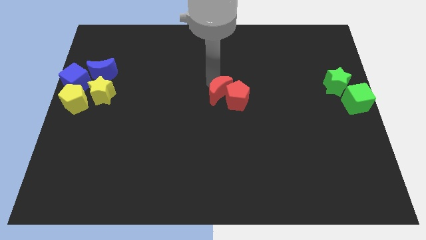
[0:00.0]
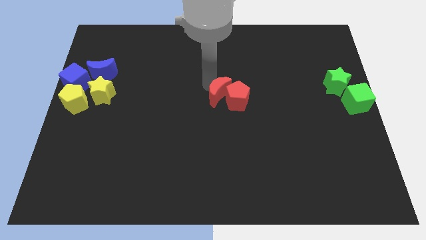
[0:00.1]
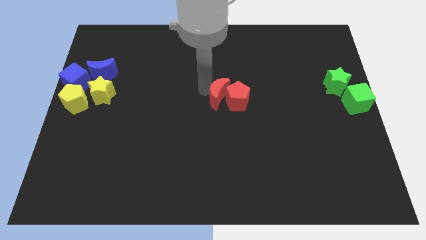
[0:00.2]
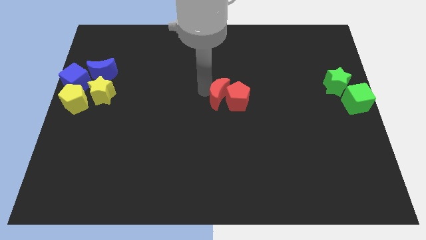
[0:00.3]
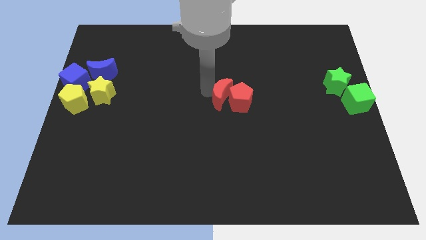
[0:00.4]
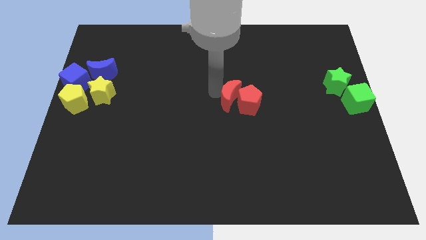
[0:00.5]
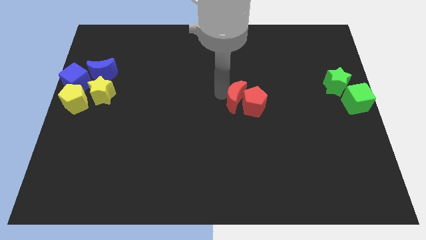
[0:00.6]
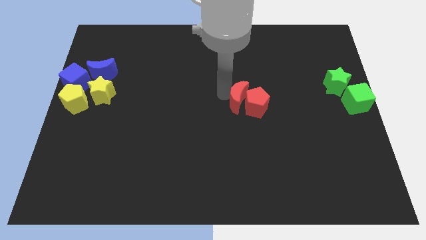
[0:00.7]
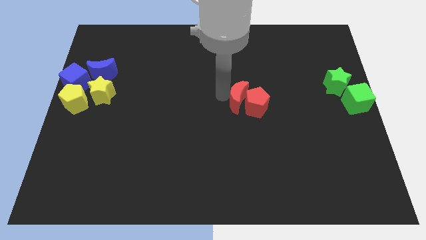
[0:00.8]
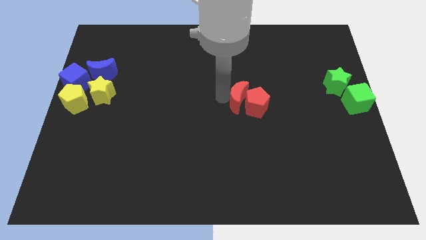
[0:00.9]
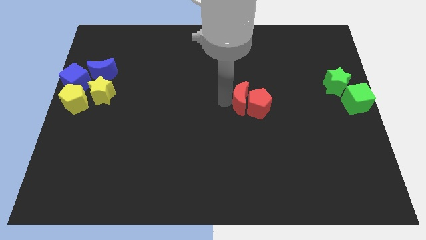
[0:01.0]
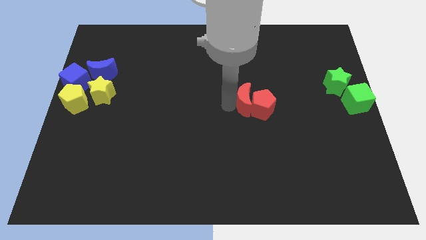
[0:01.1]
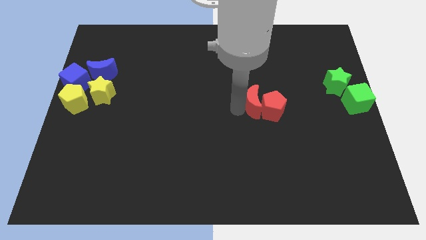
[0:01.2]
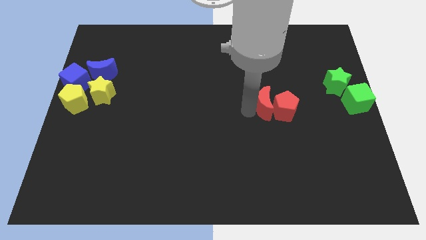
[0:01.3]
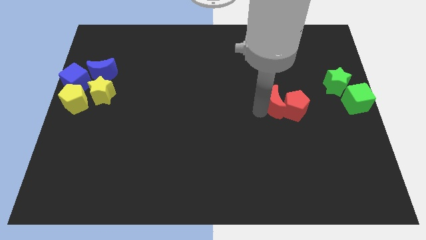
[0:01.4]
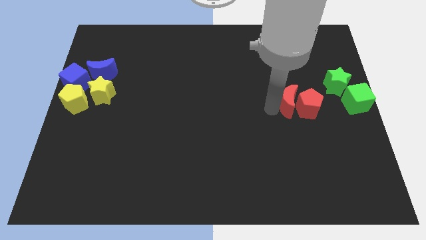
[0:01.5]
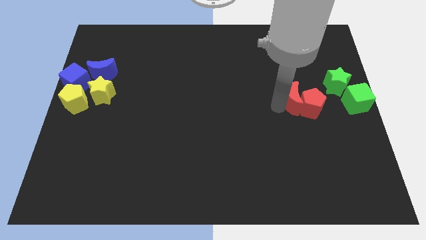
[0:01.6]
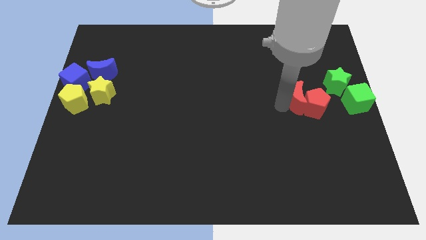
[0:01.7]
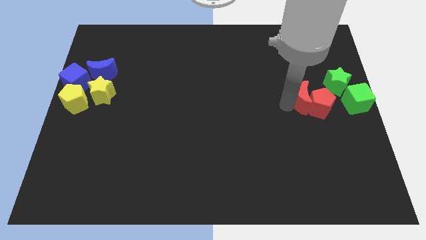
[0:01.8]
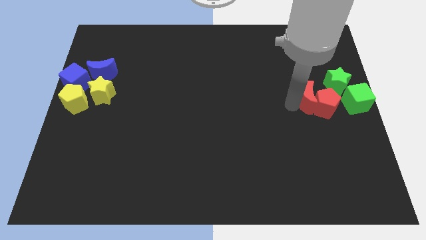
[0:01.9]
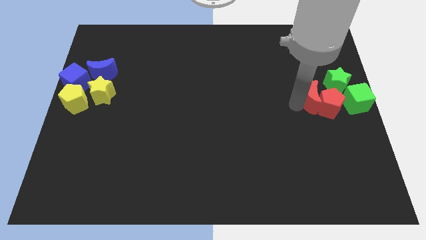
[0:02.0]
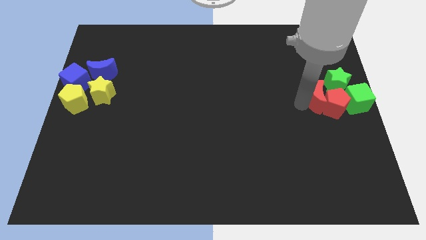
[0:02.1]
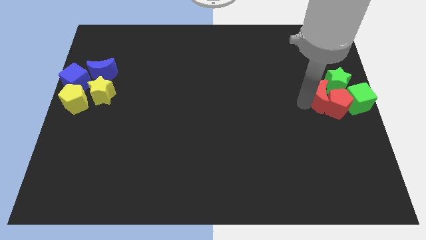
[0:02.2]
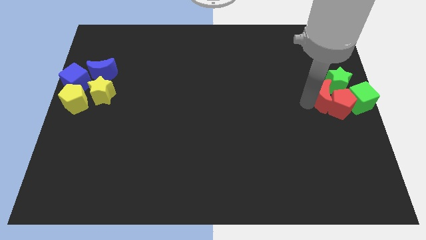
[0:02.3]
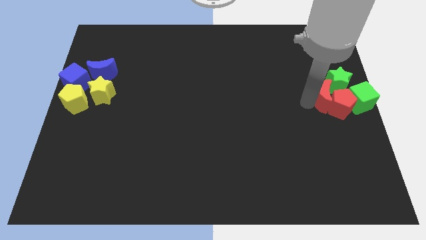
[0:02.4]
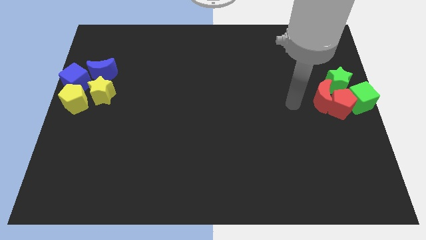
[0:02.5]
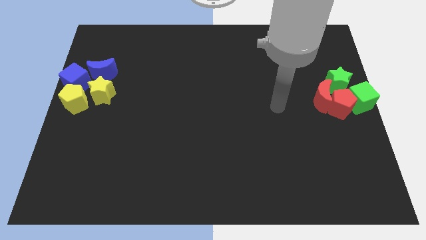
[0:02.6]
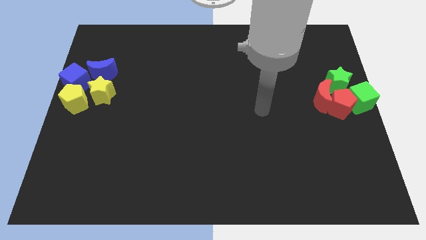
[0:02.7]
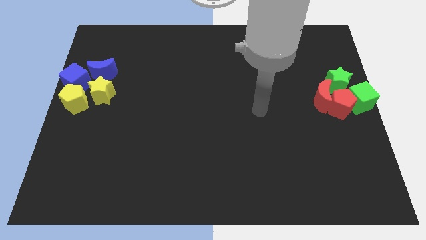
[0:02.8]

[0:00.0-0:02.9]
drag the red blocks into the green blocks

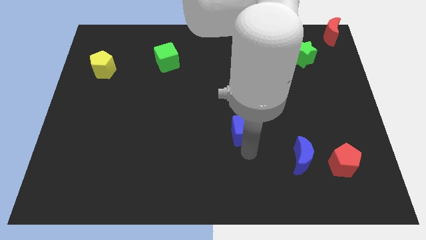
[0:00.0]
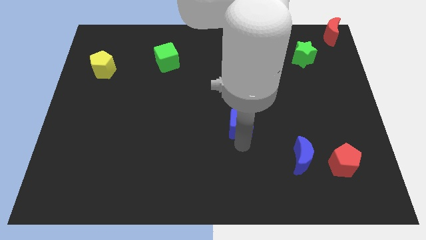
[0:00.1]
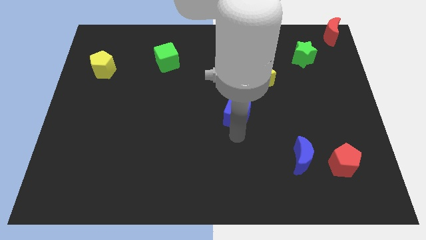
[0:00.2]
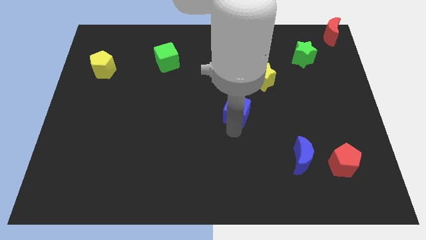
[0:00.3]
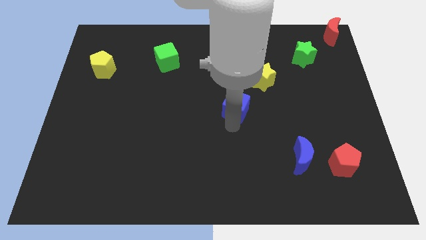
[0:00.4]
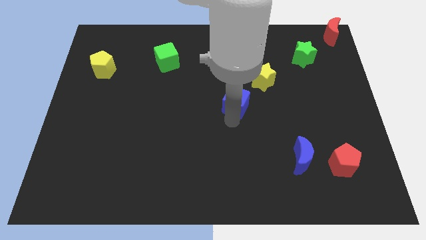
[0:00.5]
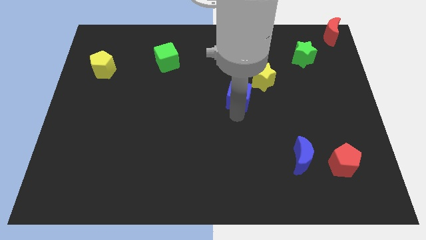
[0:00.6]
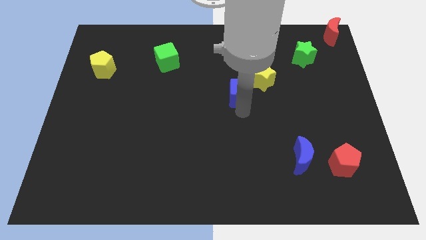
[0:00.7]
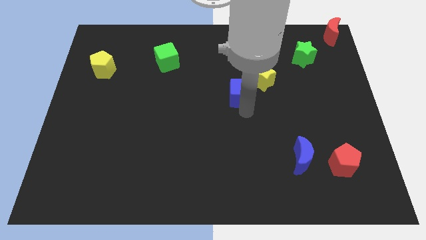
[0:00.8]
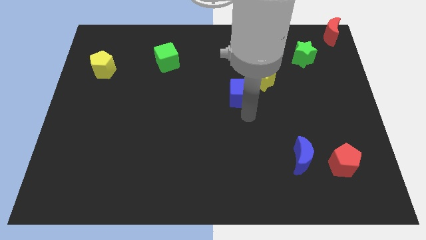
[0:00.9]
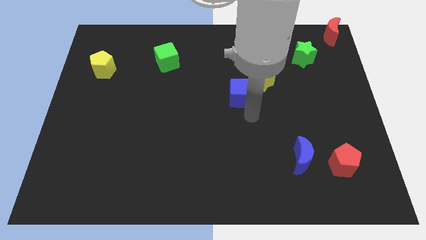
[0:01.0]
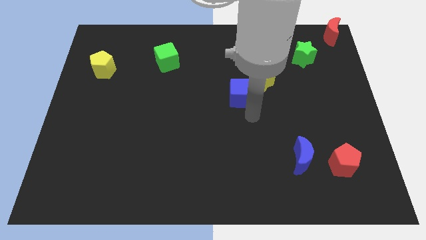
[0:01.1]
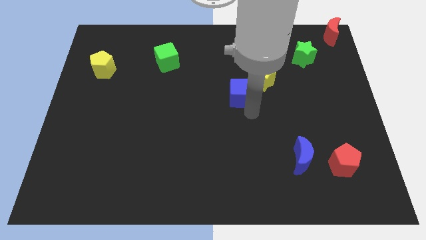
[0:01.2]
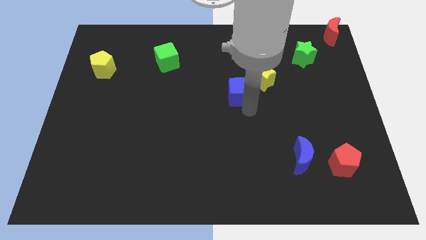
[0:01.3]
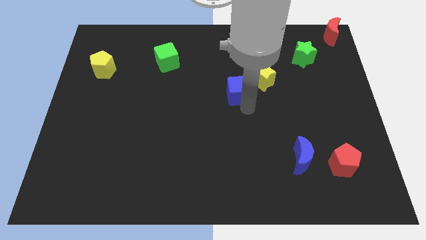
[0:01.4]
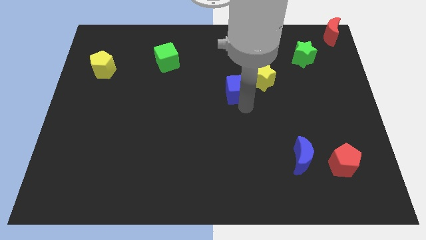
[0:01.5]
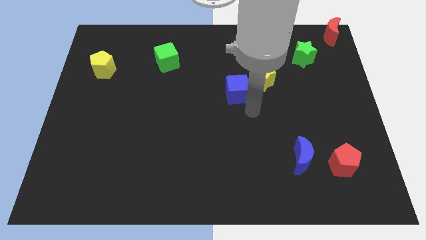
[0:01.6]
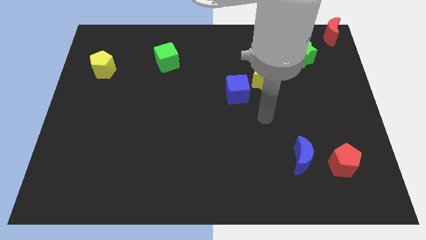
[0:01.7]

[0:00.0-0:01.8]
move the blue cube closer to the yellow star

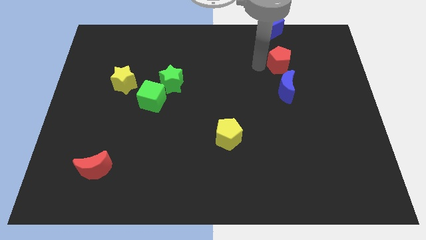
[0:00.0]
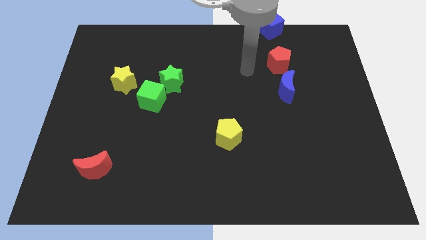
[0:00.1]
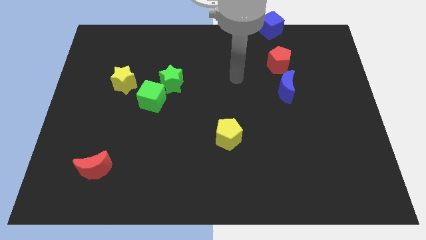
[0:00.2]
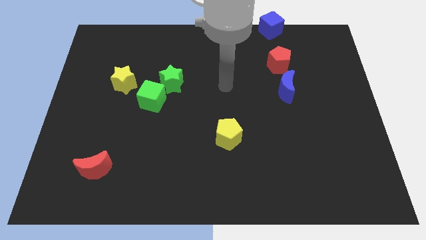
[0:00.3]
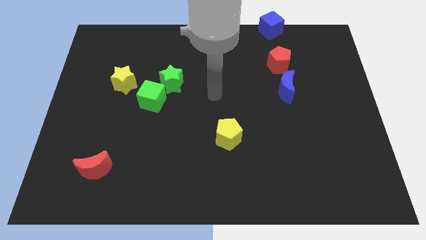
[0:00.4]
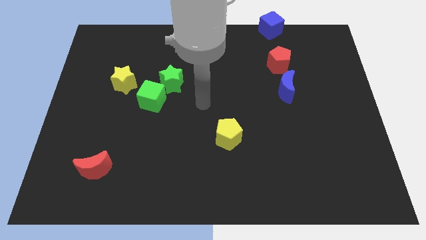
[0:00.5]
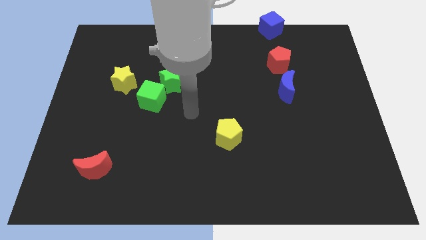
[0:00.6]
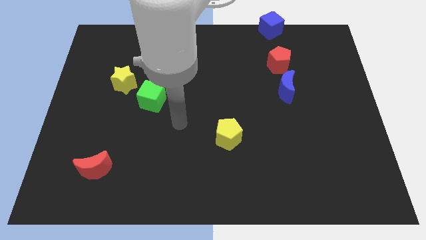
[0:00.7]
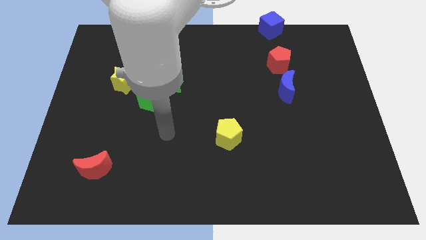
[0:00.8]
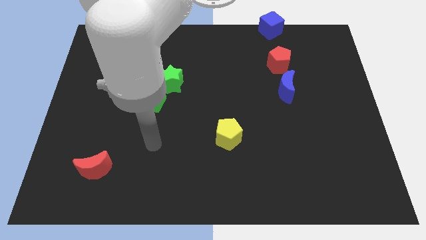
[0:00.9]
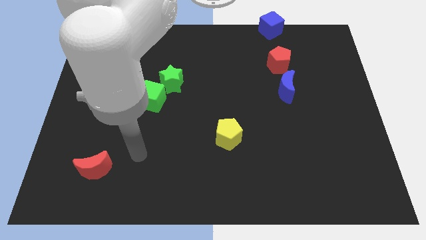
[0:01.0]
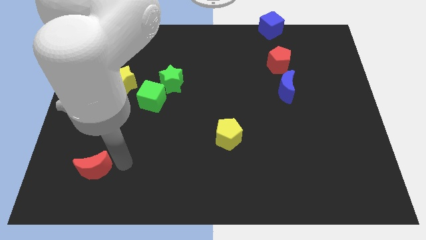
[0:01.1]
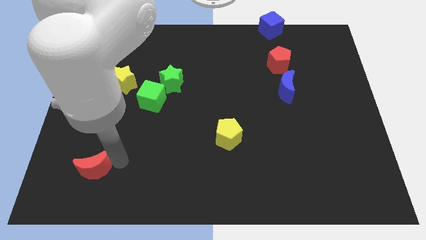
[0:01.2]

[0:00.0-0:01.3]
touch the right side of the red crescent

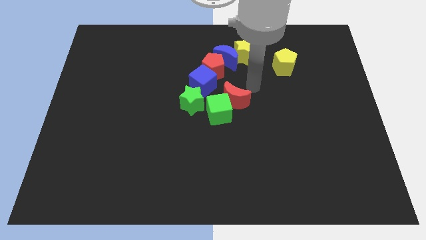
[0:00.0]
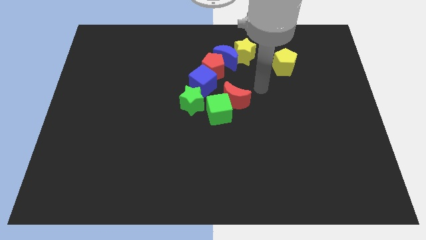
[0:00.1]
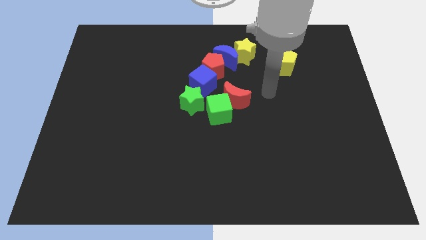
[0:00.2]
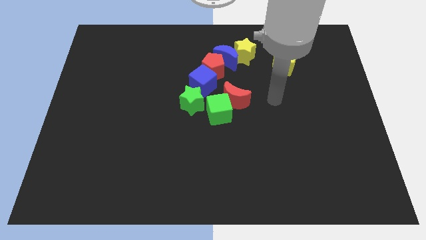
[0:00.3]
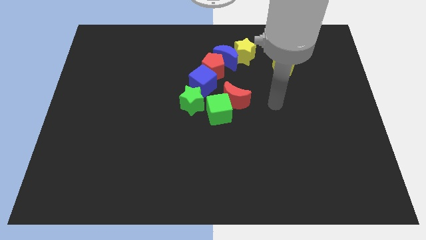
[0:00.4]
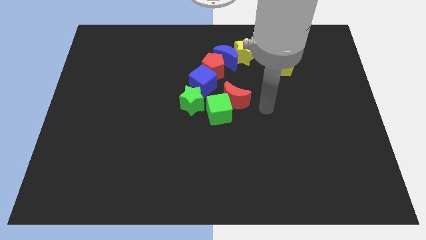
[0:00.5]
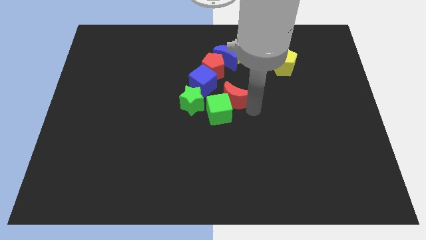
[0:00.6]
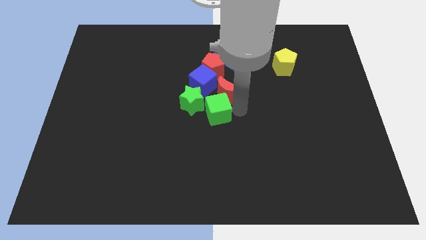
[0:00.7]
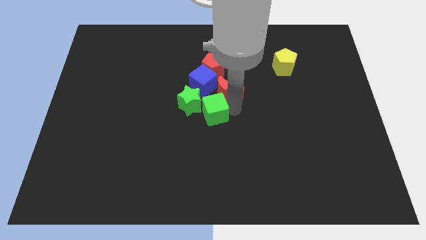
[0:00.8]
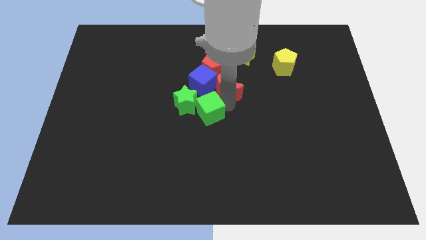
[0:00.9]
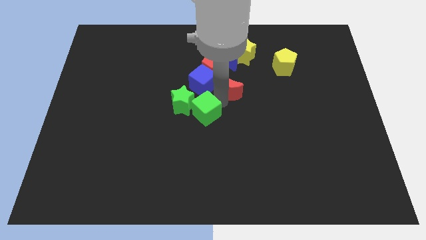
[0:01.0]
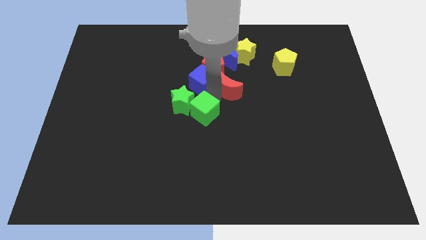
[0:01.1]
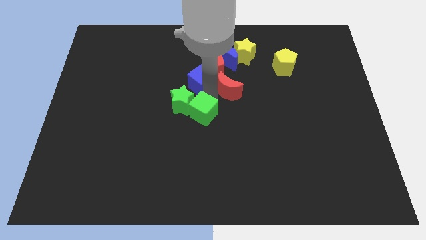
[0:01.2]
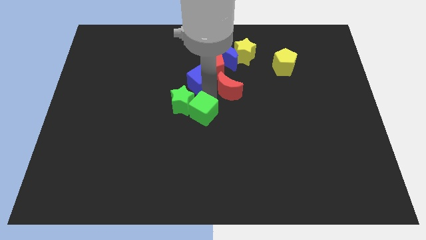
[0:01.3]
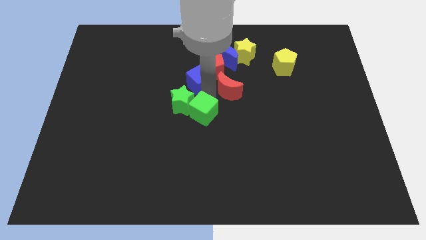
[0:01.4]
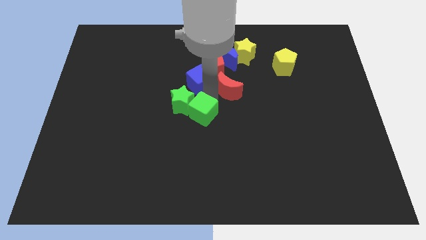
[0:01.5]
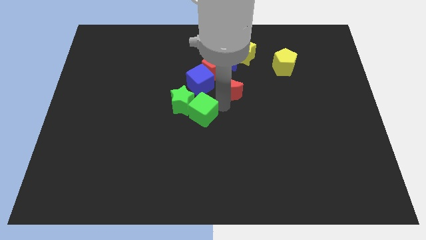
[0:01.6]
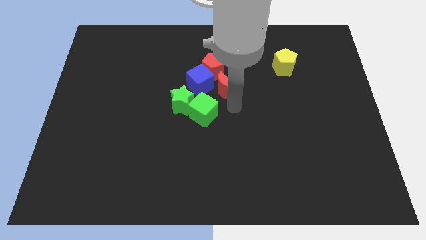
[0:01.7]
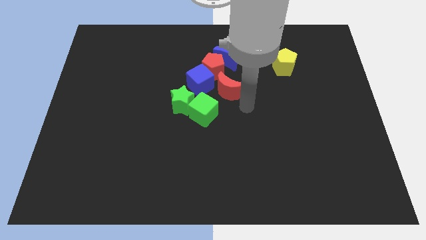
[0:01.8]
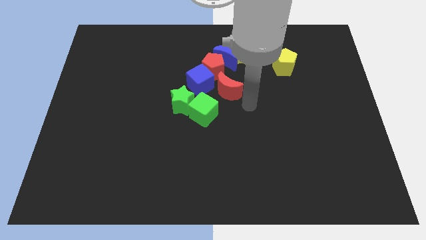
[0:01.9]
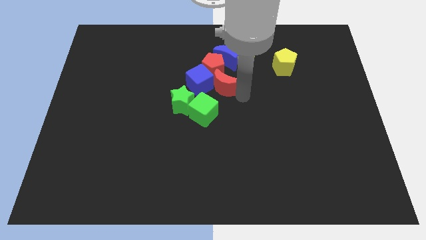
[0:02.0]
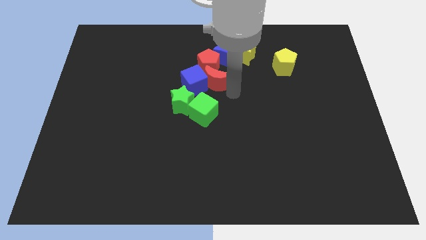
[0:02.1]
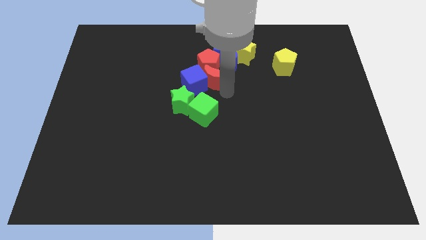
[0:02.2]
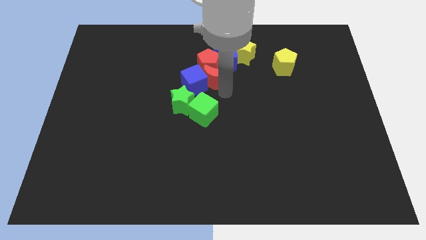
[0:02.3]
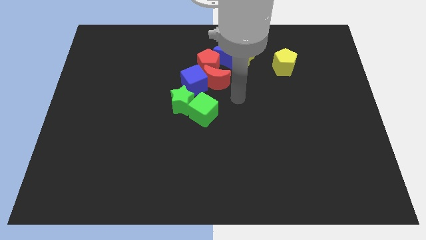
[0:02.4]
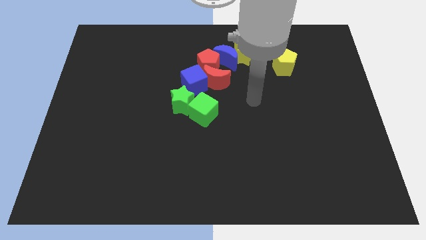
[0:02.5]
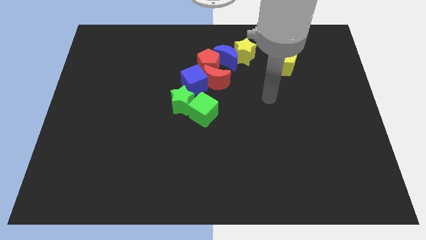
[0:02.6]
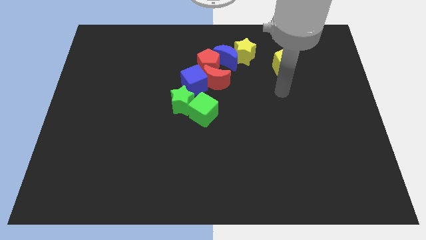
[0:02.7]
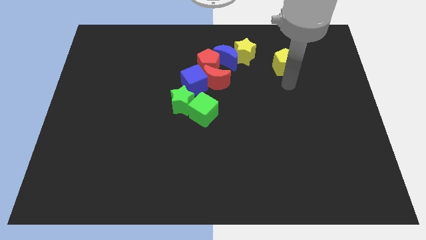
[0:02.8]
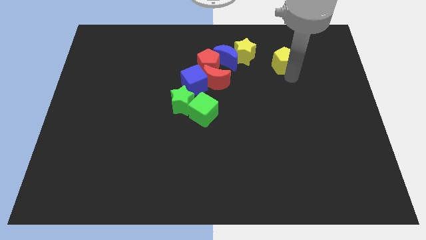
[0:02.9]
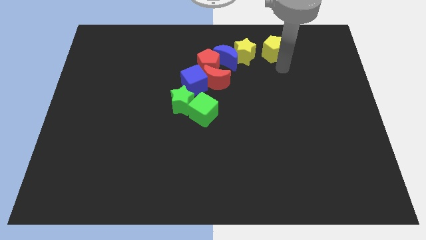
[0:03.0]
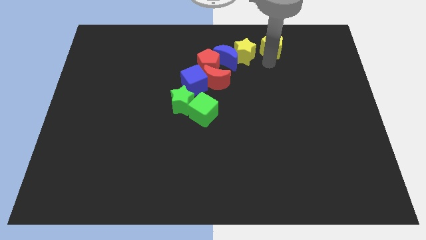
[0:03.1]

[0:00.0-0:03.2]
place red crescent in between blue cube and red pentagon
